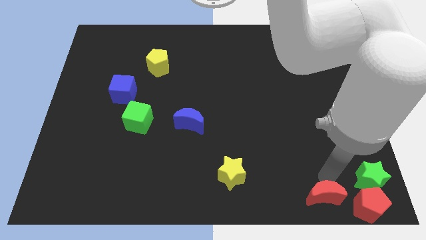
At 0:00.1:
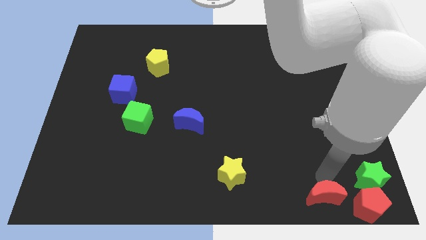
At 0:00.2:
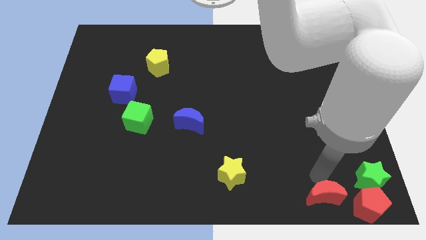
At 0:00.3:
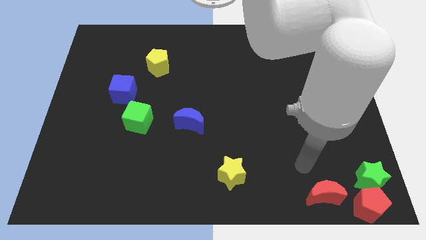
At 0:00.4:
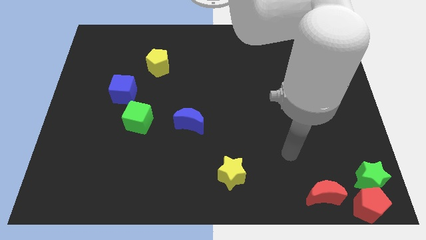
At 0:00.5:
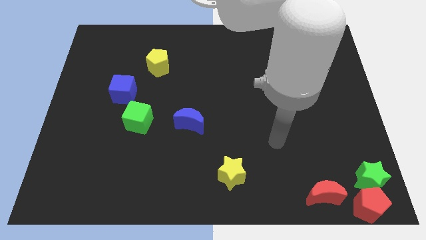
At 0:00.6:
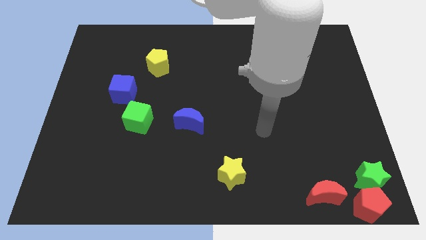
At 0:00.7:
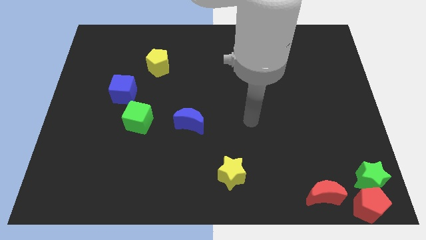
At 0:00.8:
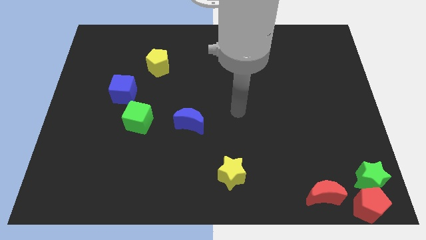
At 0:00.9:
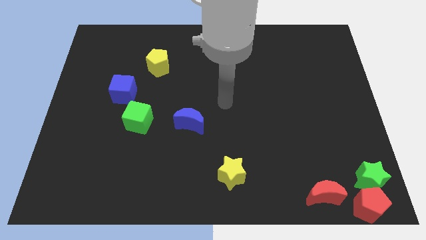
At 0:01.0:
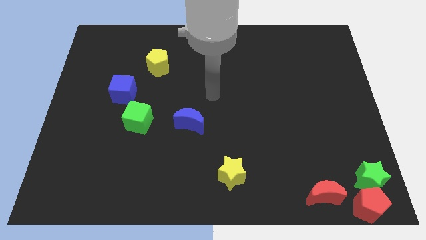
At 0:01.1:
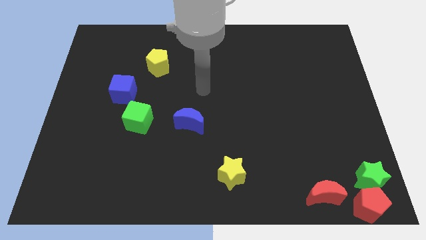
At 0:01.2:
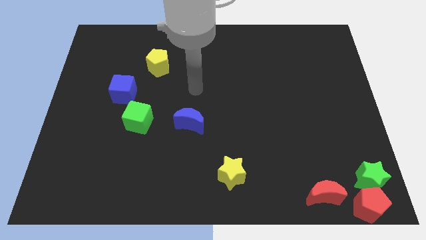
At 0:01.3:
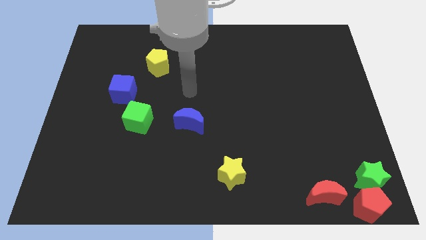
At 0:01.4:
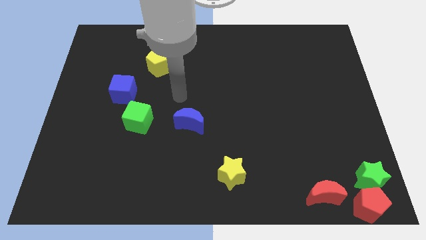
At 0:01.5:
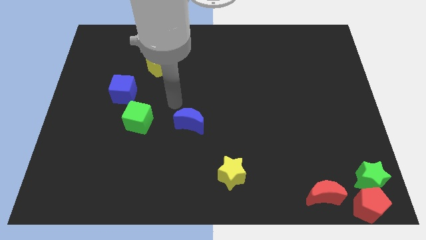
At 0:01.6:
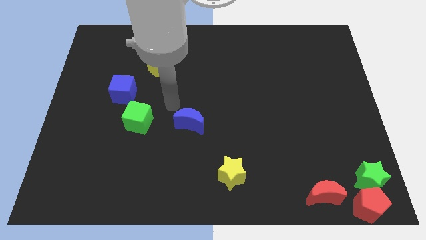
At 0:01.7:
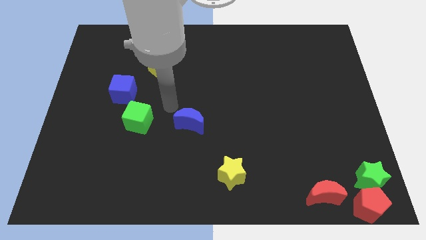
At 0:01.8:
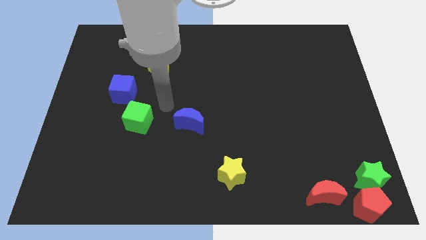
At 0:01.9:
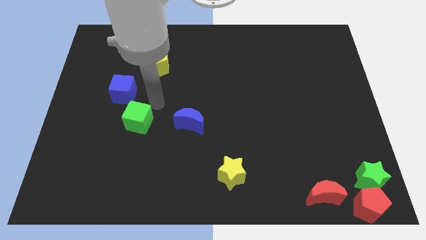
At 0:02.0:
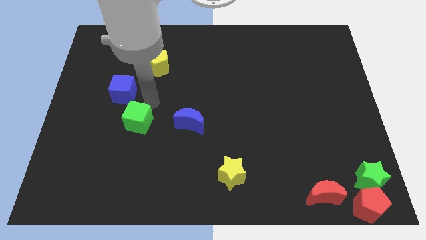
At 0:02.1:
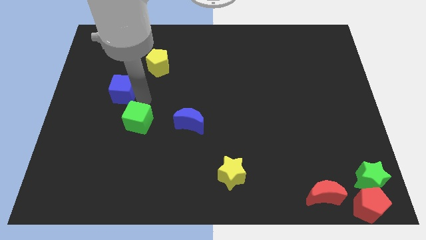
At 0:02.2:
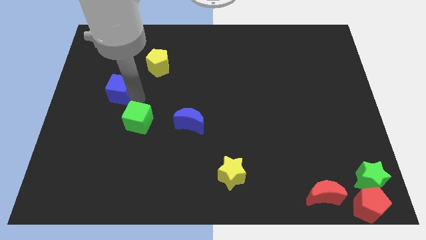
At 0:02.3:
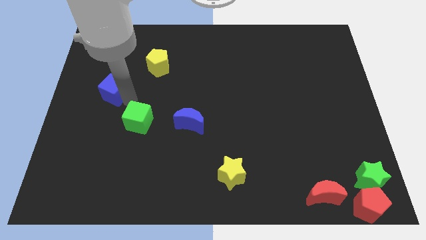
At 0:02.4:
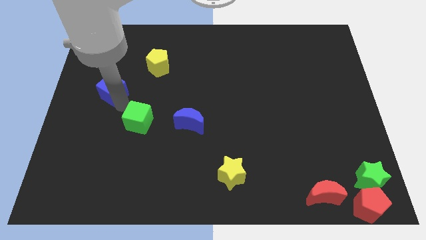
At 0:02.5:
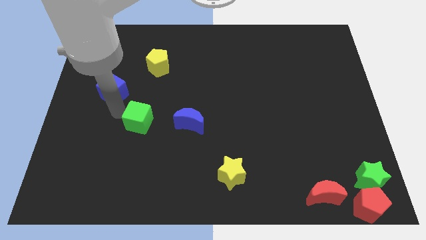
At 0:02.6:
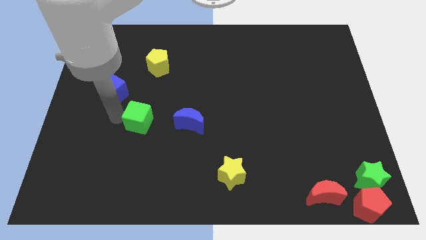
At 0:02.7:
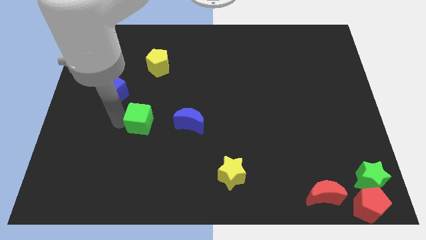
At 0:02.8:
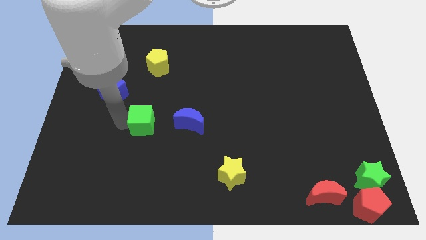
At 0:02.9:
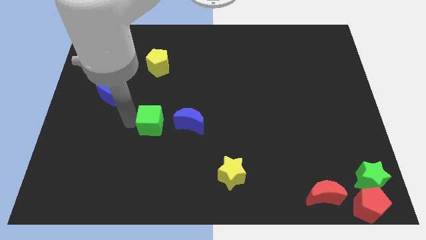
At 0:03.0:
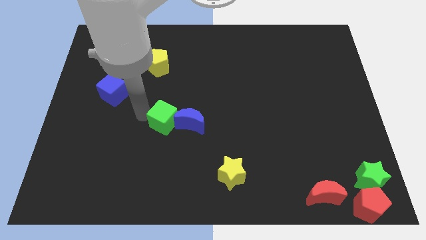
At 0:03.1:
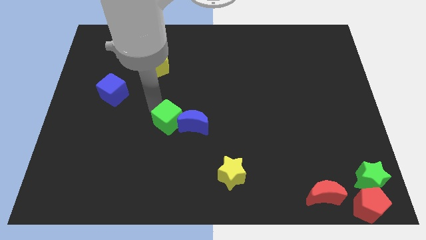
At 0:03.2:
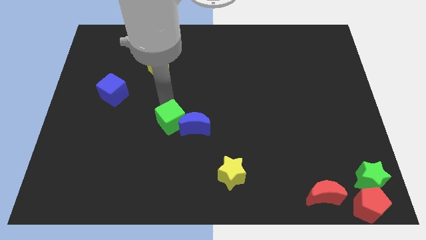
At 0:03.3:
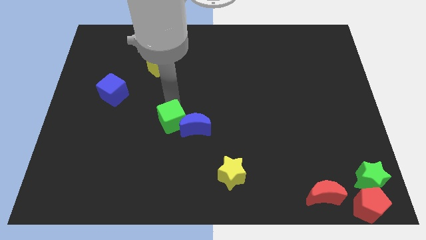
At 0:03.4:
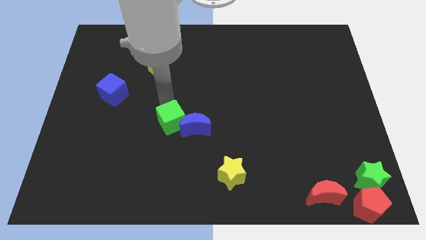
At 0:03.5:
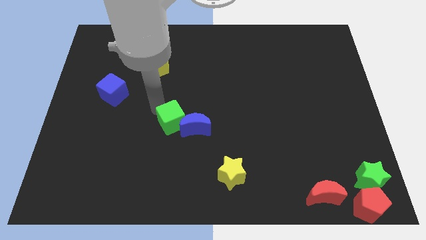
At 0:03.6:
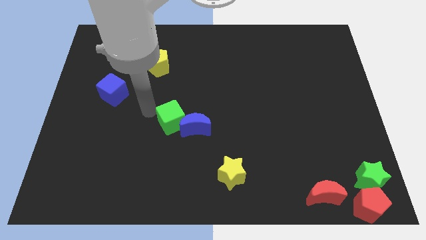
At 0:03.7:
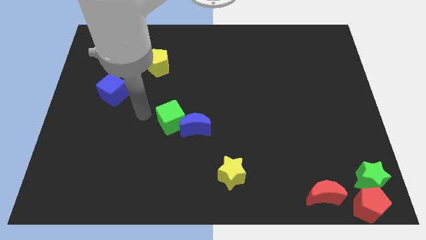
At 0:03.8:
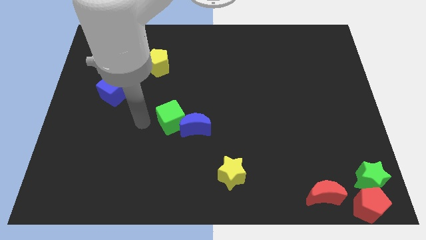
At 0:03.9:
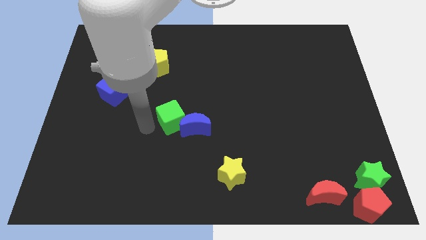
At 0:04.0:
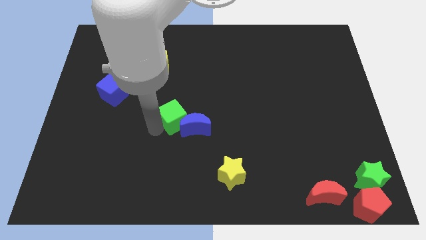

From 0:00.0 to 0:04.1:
move green cube into blue moon

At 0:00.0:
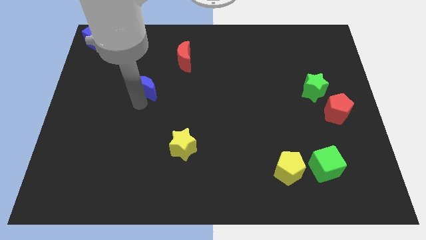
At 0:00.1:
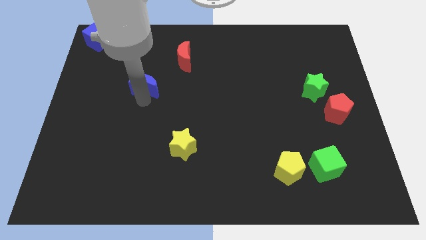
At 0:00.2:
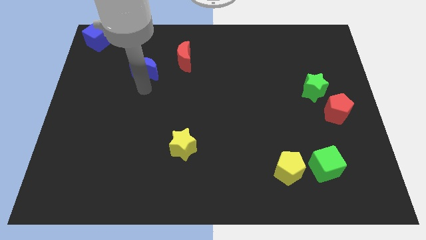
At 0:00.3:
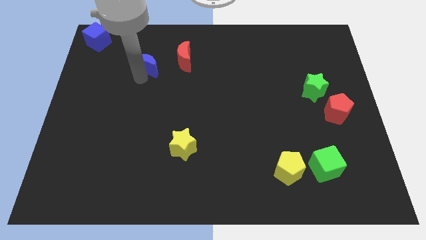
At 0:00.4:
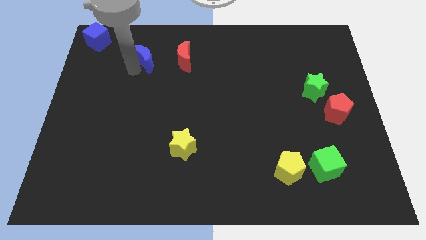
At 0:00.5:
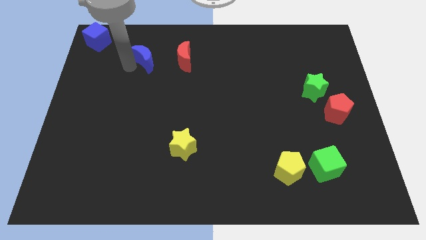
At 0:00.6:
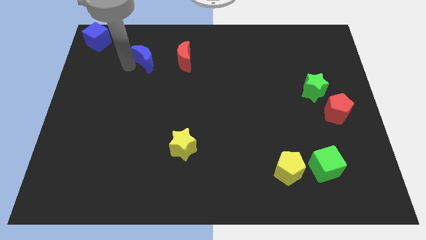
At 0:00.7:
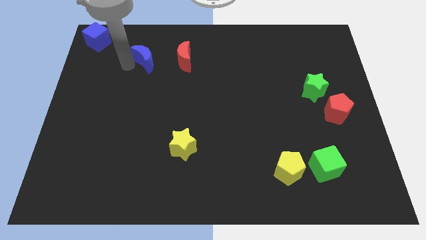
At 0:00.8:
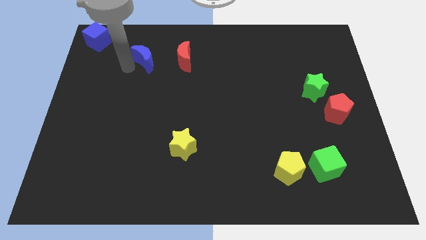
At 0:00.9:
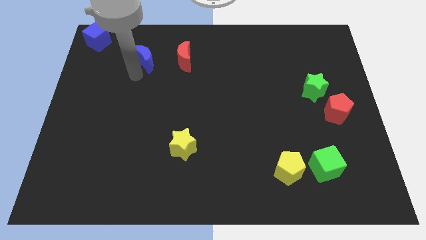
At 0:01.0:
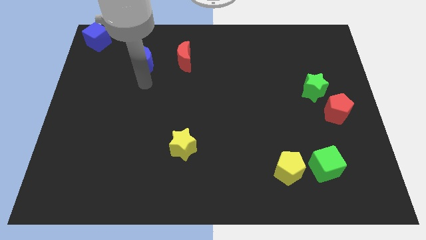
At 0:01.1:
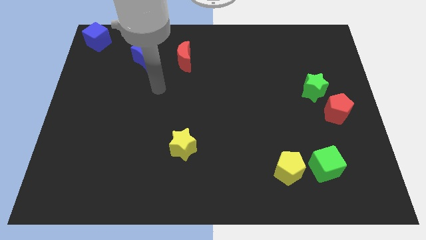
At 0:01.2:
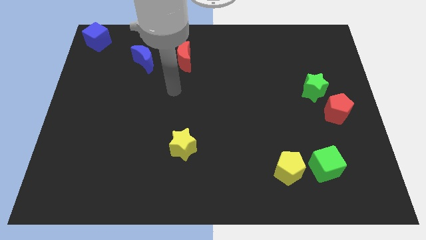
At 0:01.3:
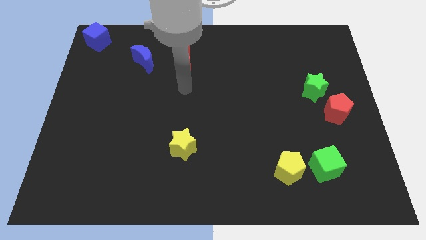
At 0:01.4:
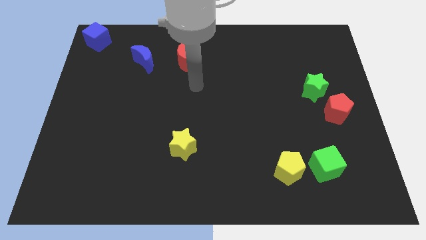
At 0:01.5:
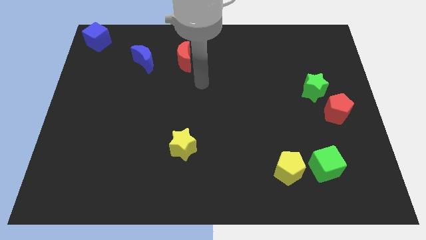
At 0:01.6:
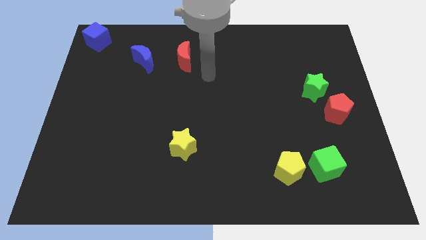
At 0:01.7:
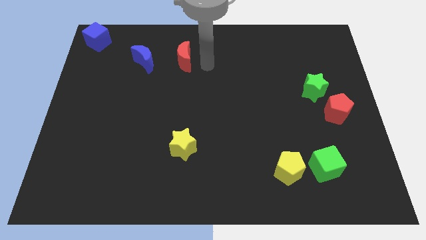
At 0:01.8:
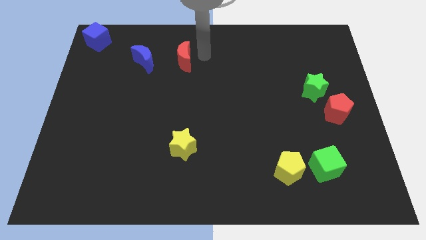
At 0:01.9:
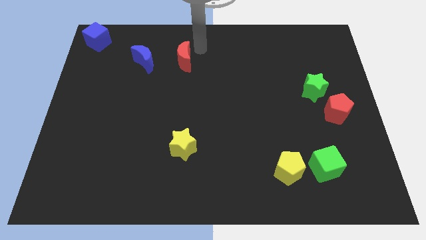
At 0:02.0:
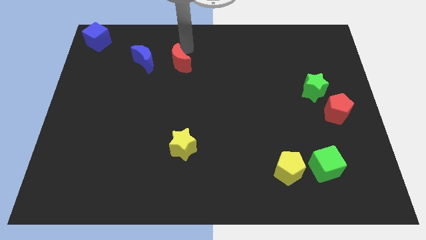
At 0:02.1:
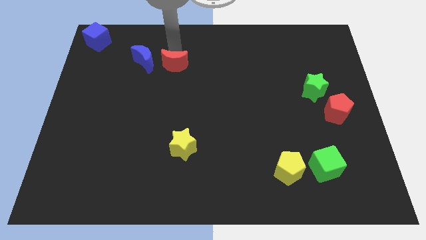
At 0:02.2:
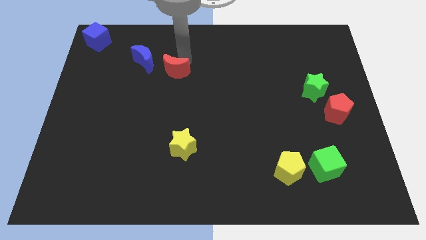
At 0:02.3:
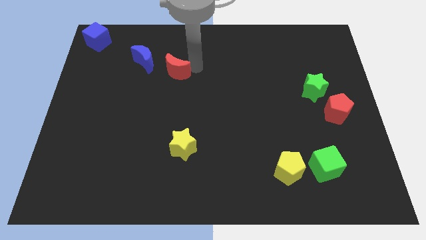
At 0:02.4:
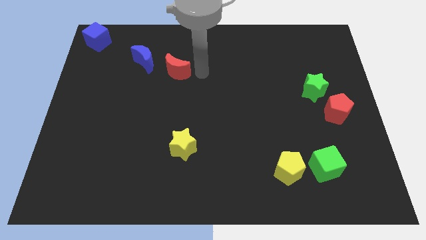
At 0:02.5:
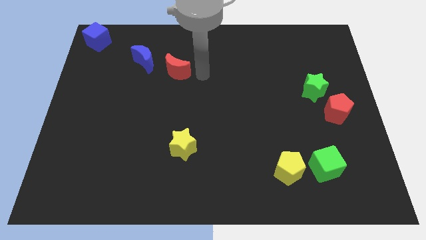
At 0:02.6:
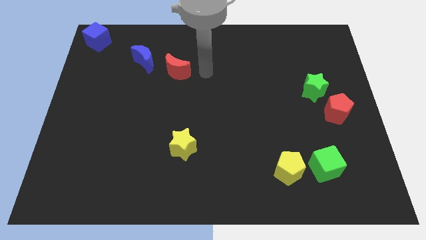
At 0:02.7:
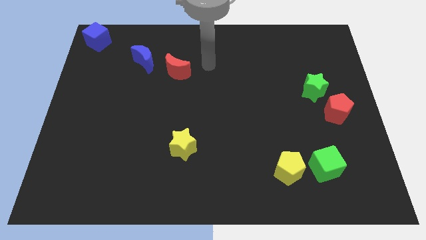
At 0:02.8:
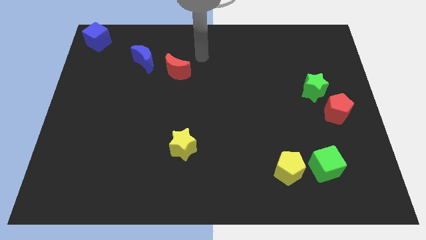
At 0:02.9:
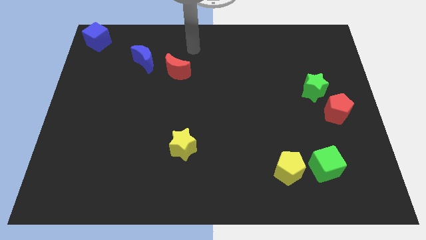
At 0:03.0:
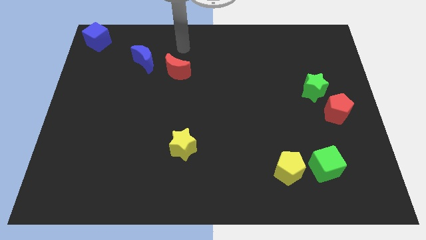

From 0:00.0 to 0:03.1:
move red moon slightly down

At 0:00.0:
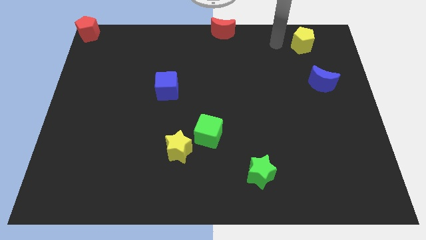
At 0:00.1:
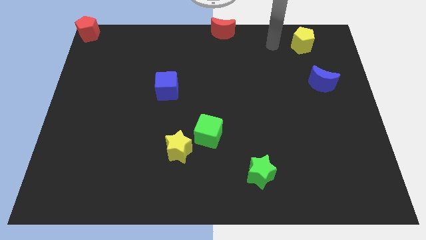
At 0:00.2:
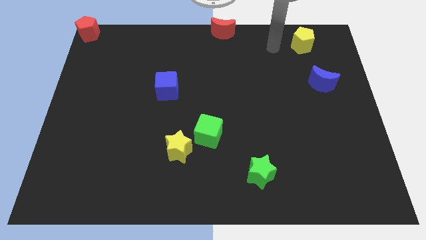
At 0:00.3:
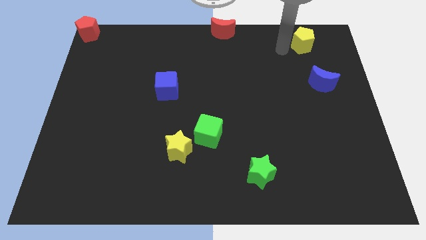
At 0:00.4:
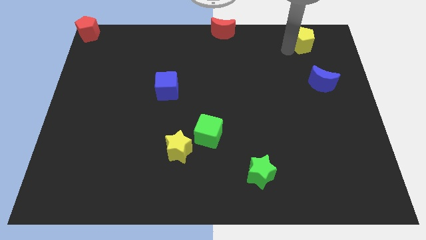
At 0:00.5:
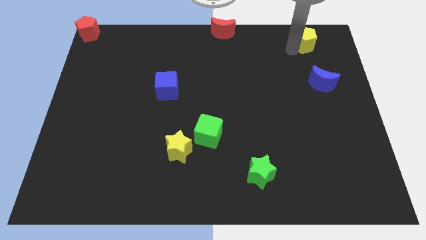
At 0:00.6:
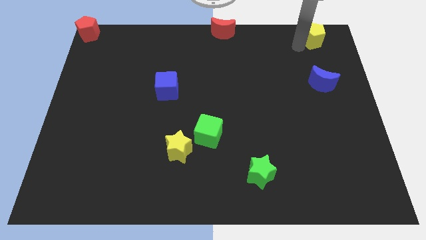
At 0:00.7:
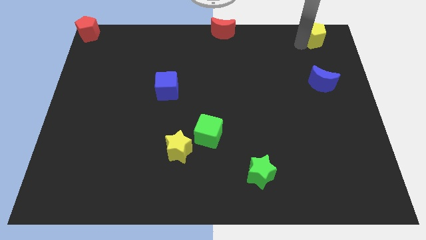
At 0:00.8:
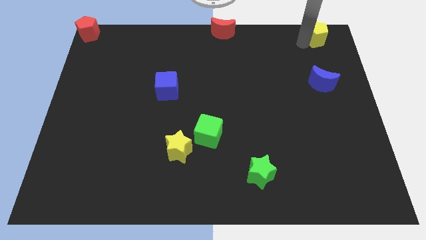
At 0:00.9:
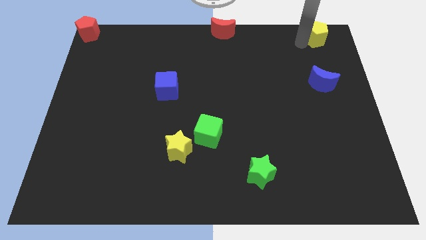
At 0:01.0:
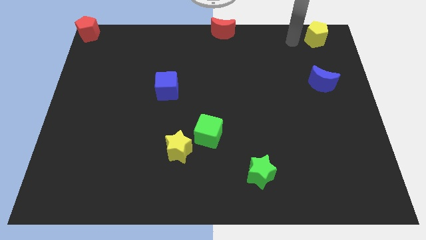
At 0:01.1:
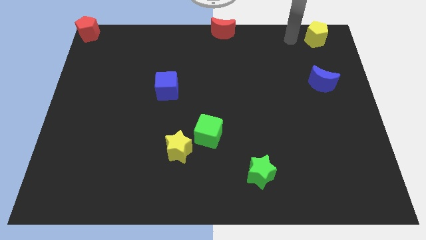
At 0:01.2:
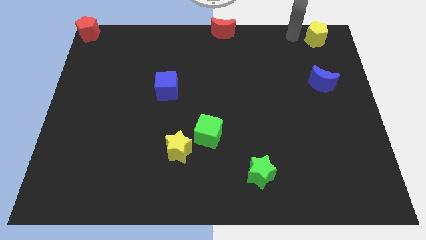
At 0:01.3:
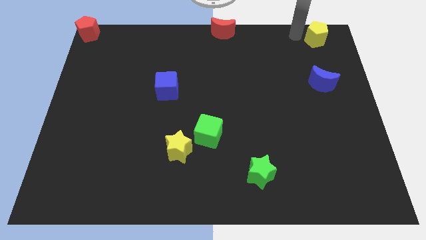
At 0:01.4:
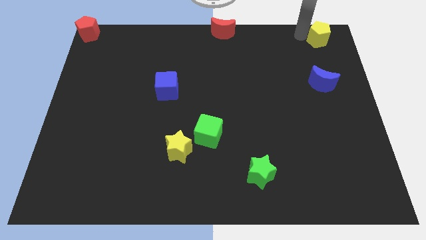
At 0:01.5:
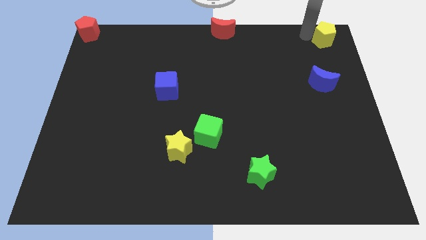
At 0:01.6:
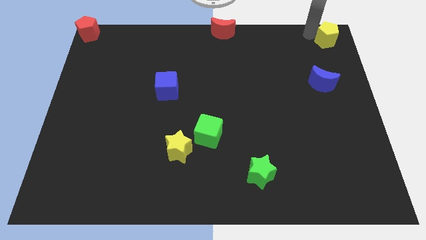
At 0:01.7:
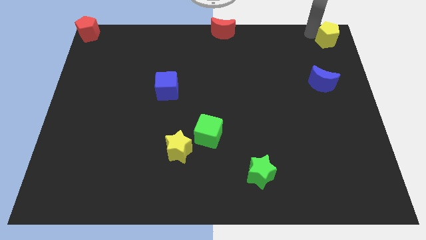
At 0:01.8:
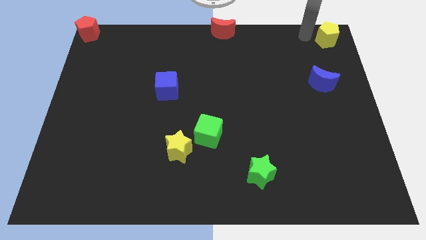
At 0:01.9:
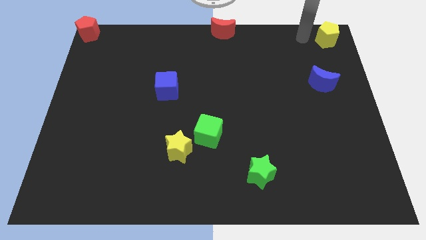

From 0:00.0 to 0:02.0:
push the yellow pentagon to the top right of the board
